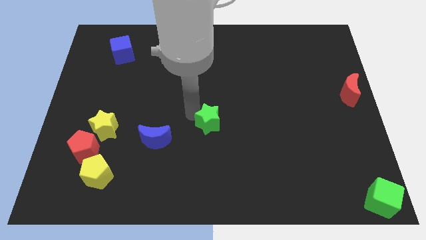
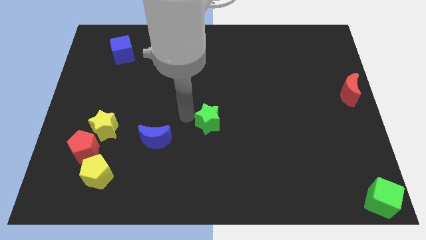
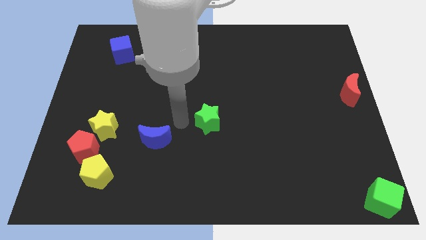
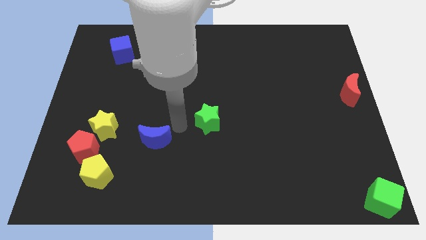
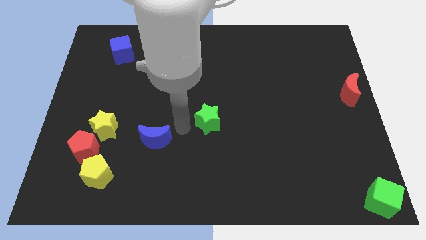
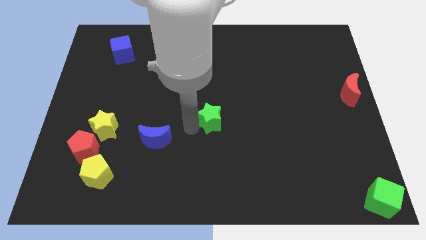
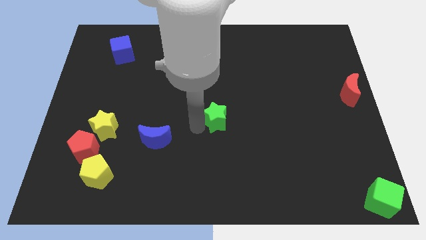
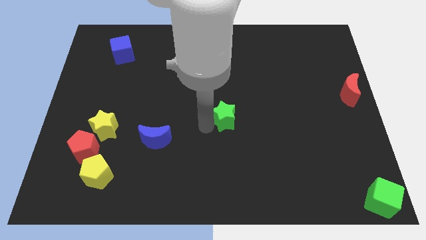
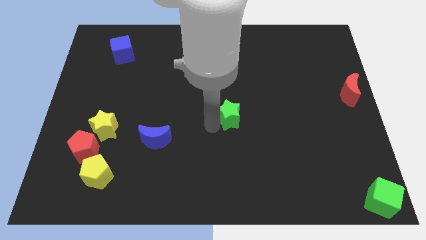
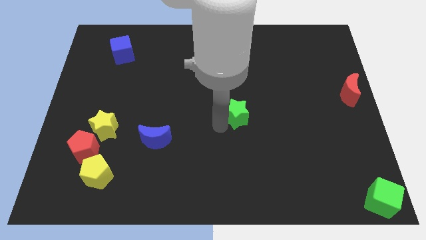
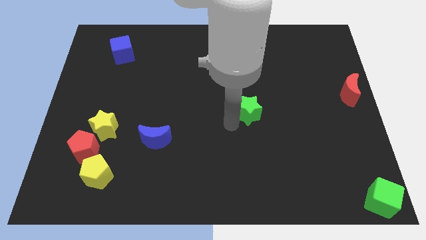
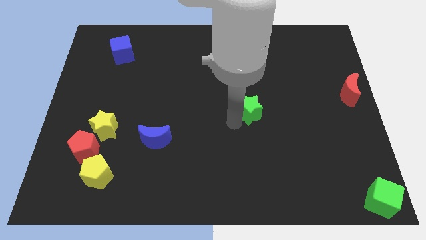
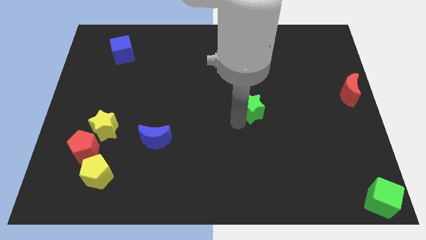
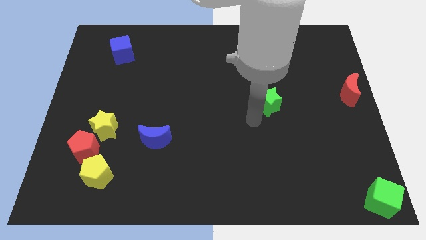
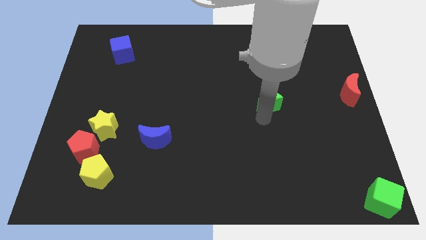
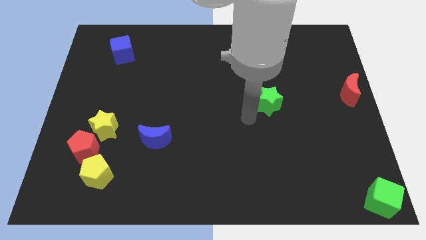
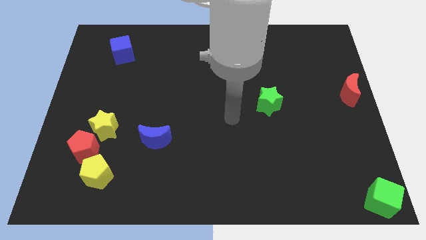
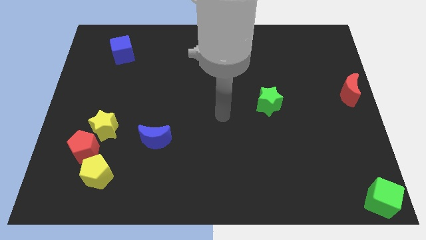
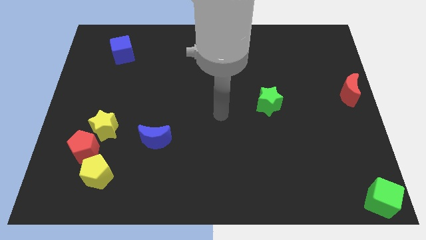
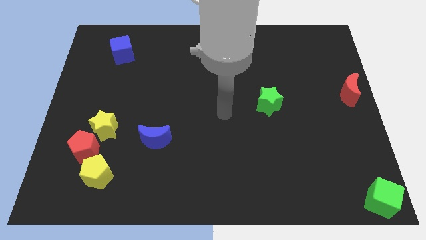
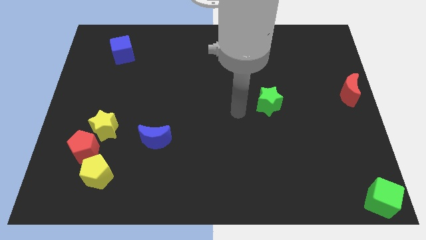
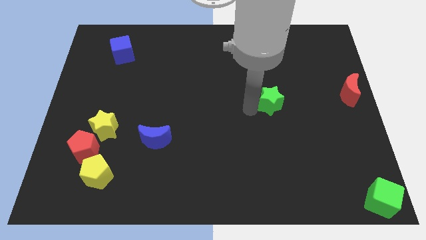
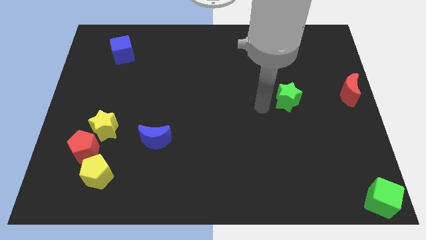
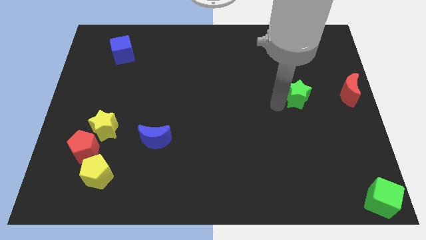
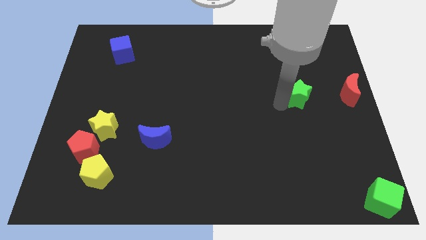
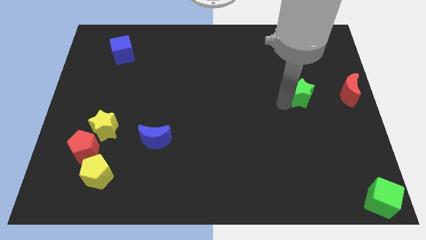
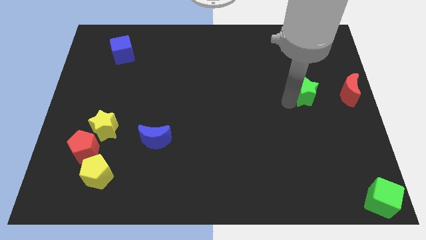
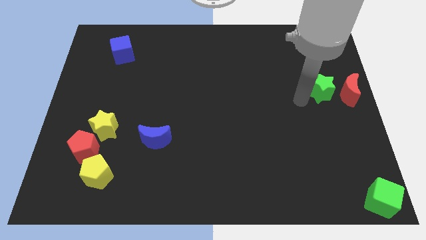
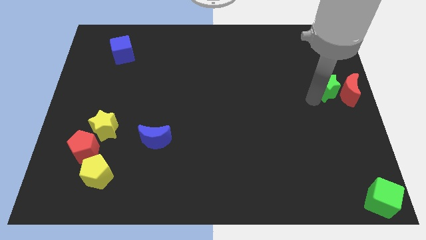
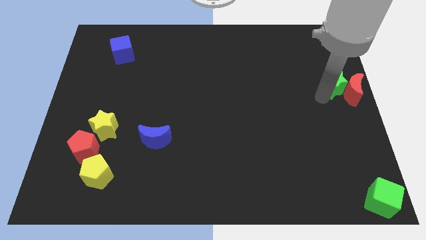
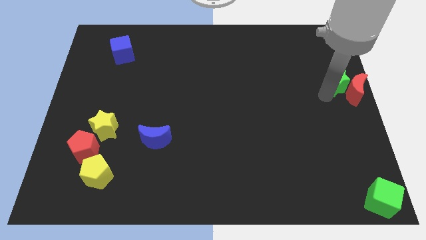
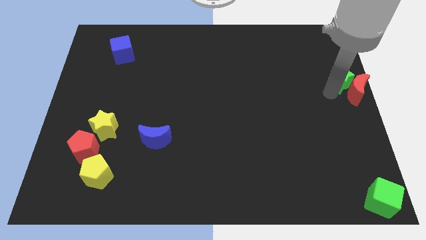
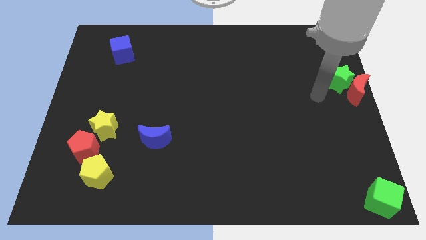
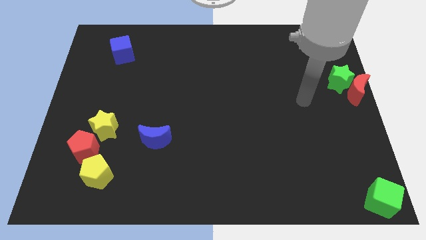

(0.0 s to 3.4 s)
push green star into the red crescent

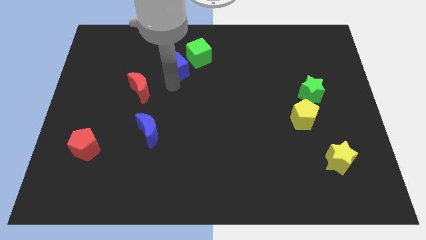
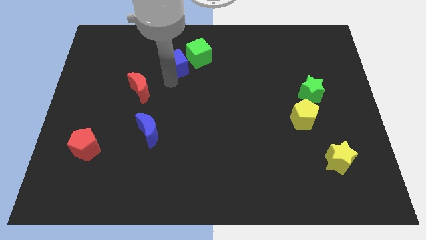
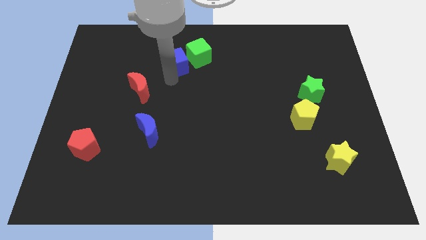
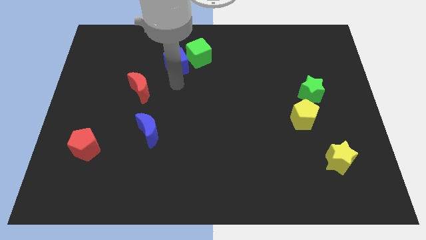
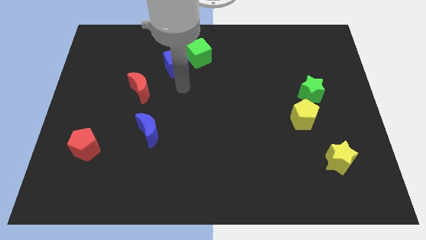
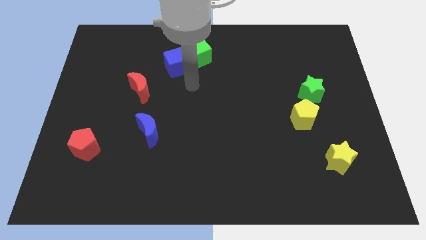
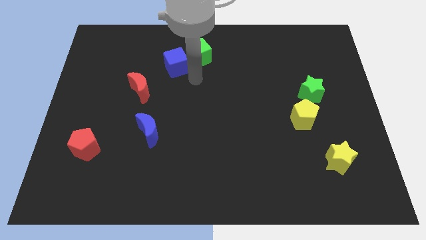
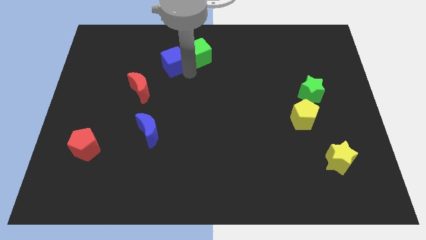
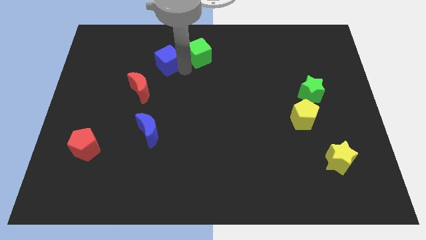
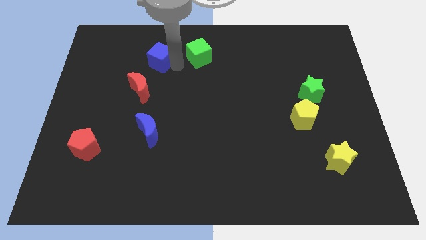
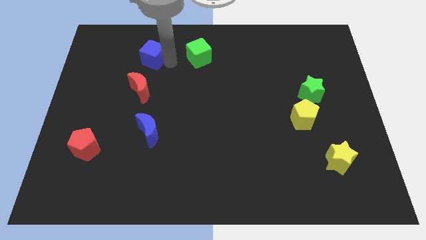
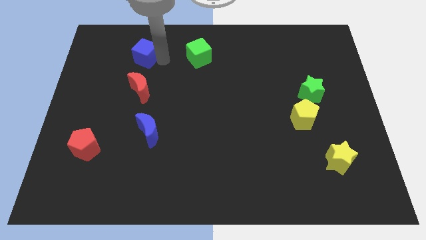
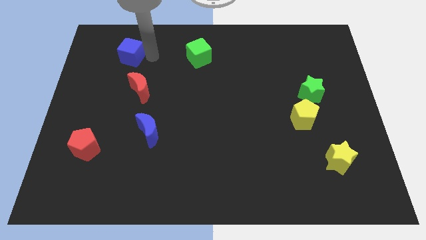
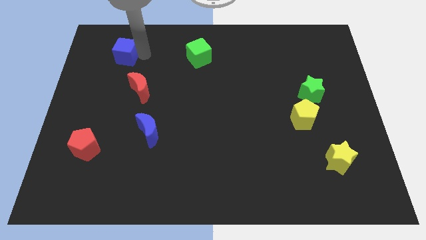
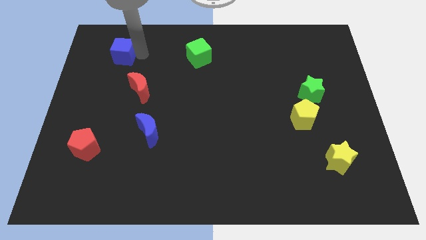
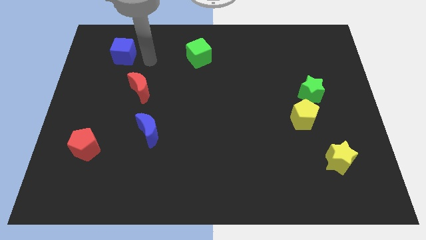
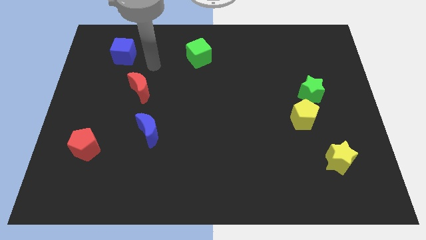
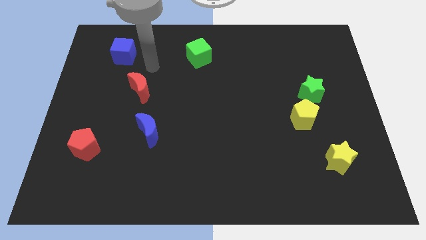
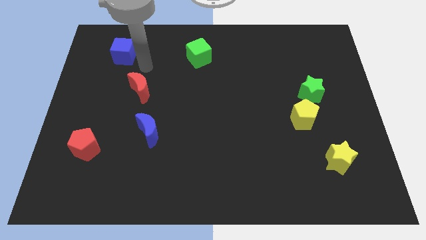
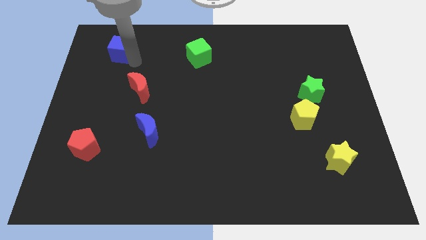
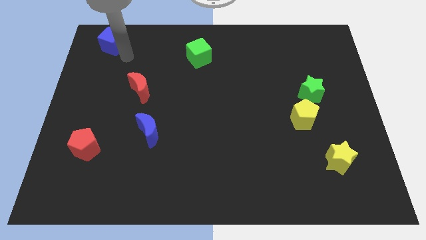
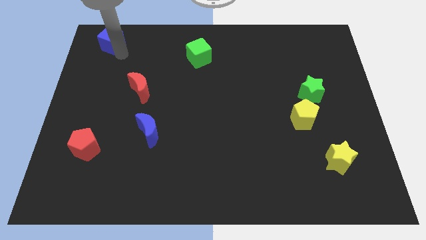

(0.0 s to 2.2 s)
push the blue cube towards the top left corner of the board

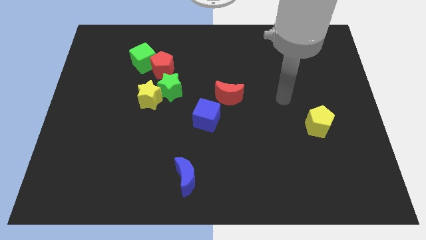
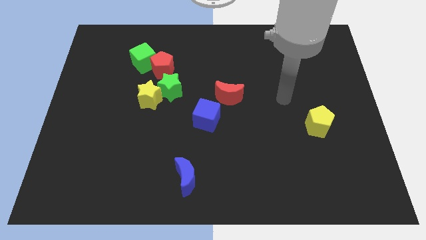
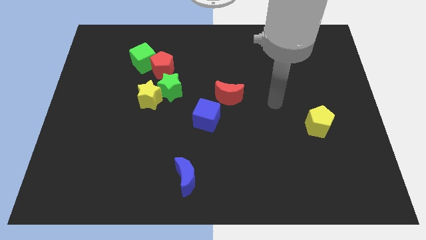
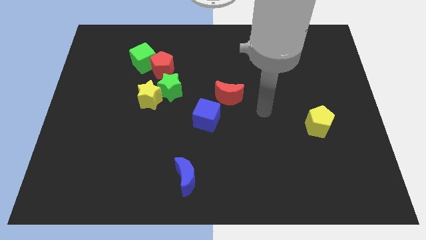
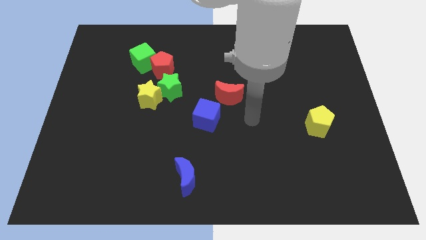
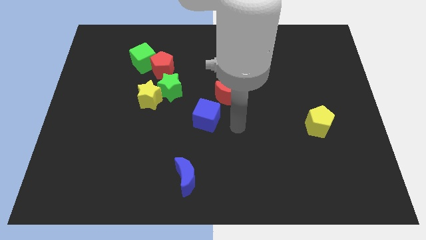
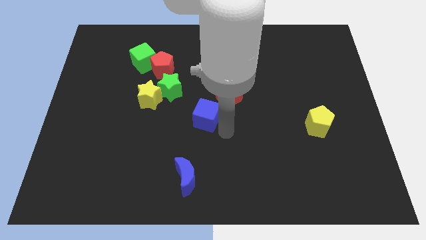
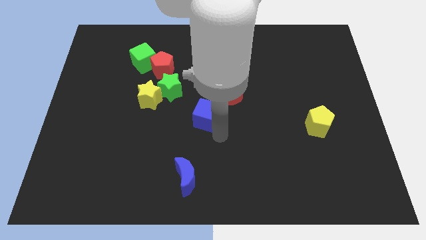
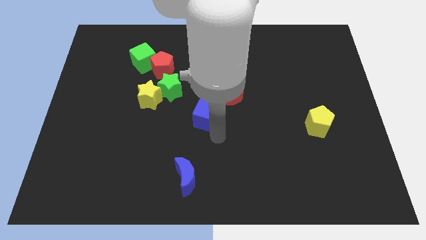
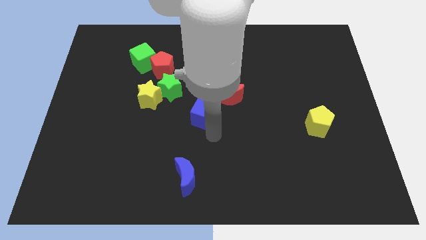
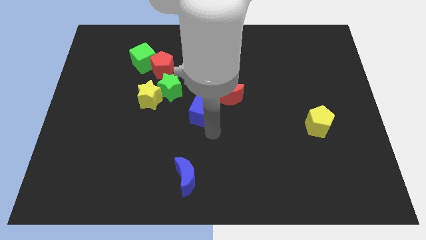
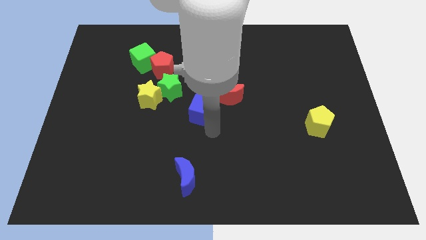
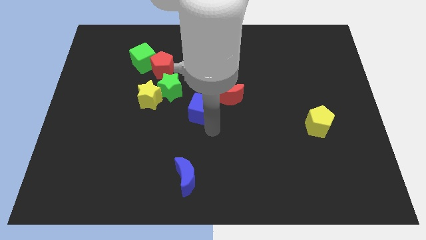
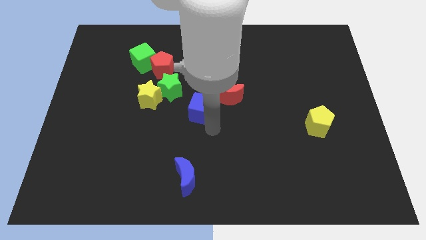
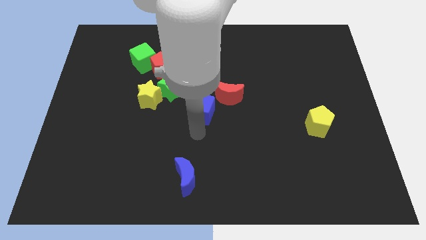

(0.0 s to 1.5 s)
push the blue cube up slightly

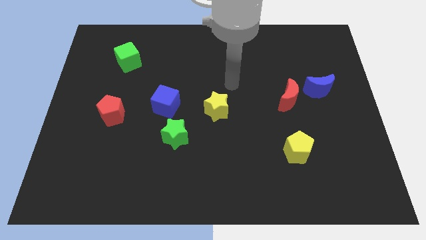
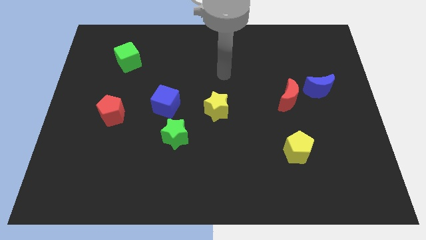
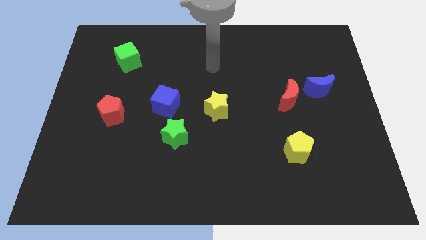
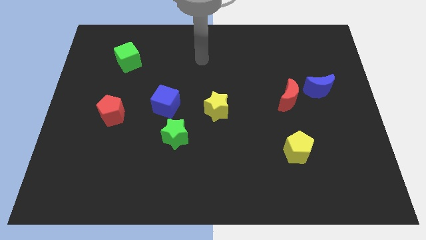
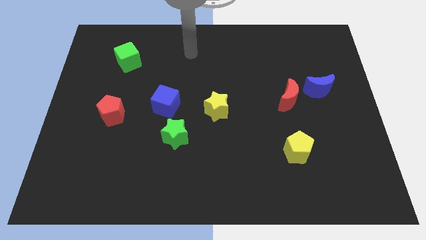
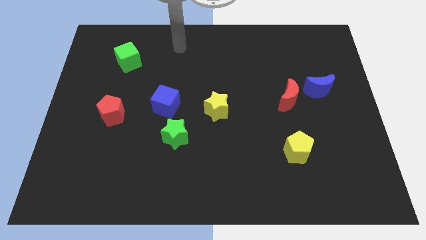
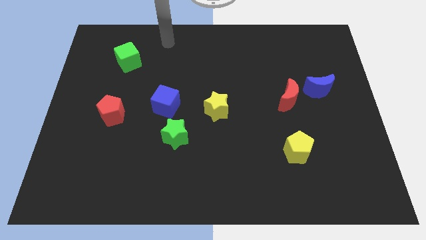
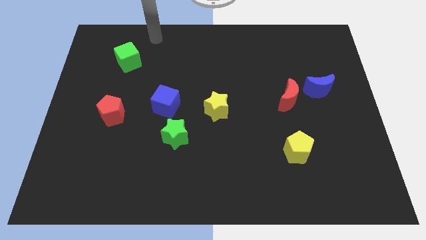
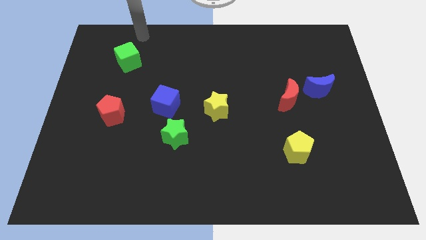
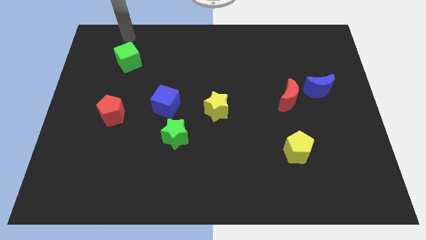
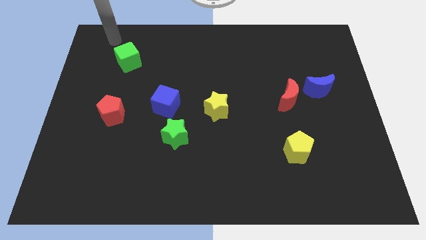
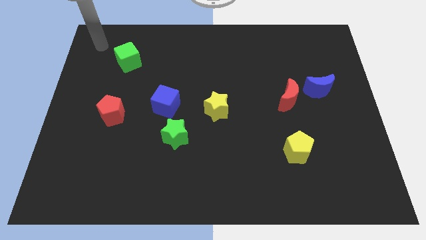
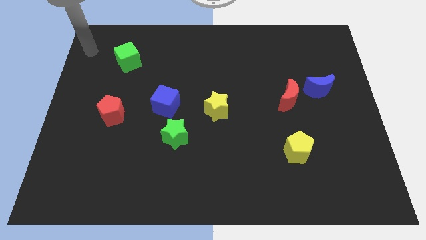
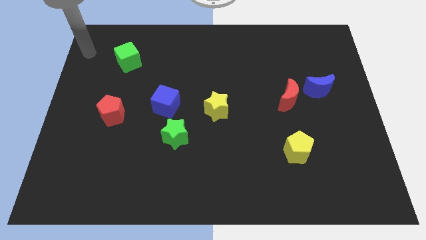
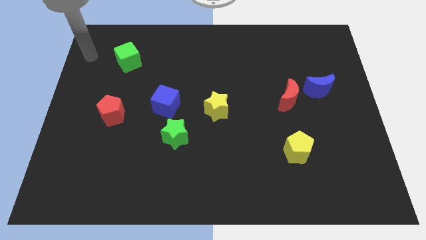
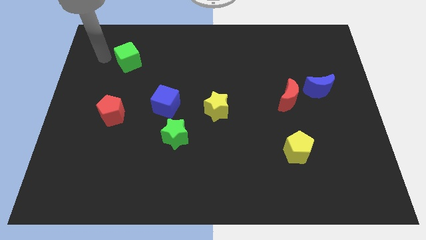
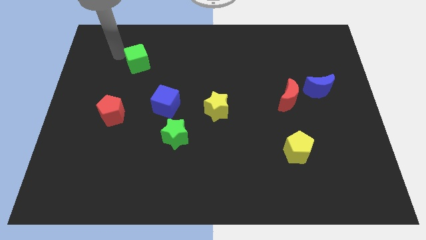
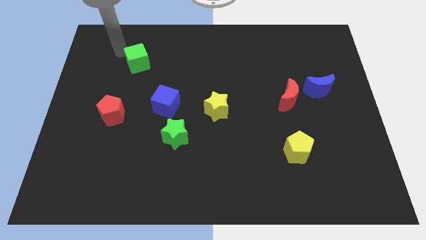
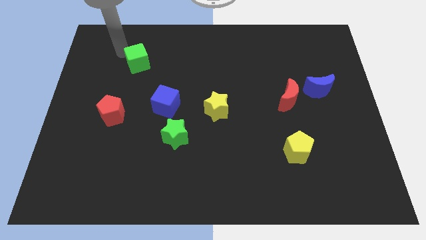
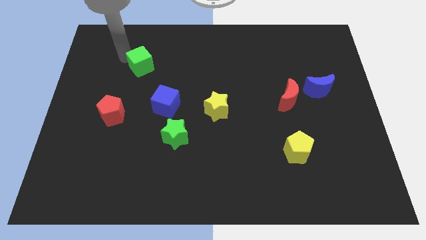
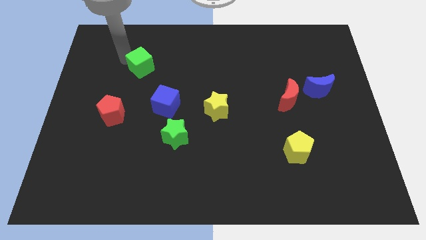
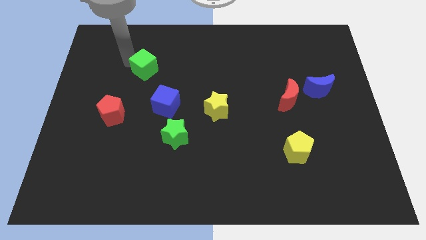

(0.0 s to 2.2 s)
drag green cube diagonally on the top left side of the blue cube
